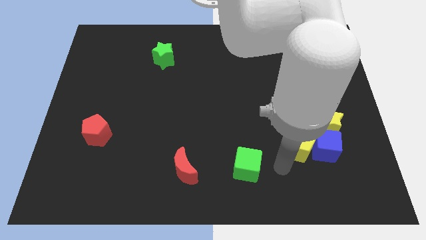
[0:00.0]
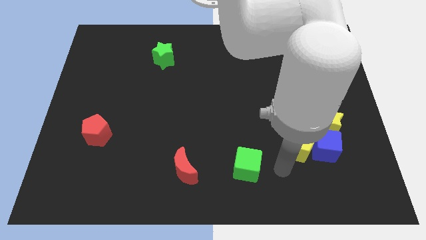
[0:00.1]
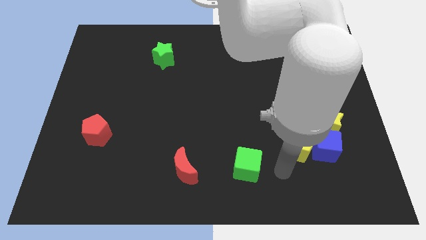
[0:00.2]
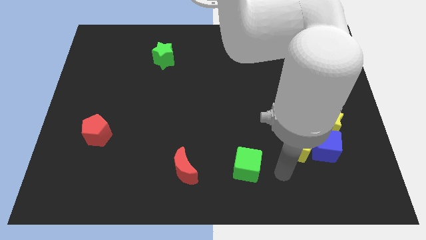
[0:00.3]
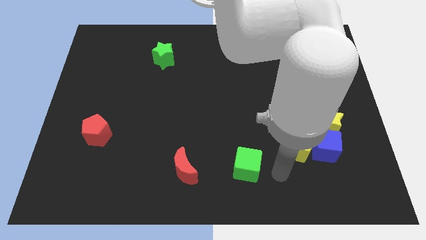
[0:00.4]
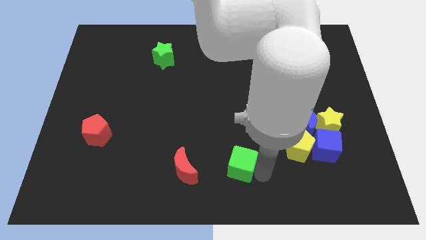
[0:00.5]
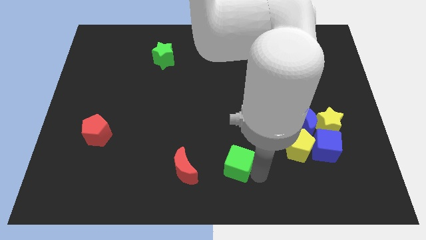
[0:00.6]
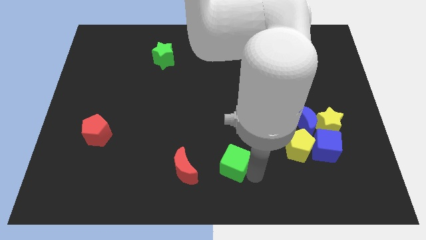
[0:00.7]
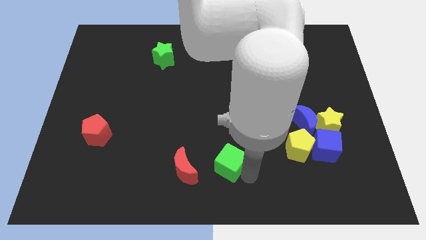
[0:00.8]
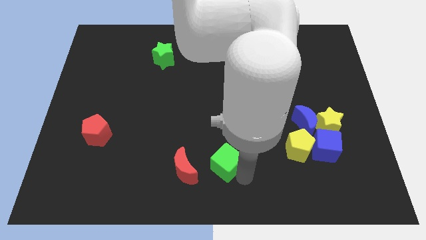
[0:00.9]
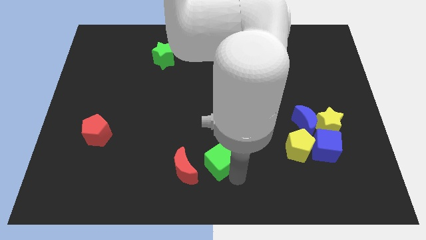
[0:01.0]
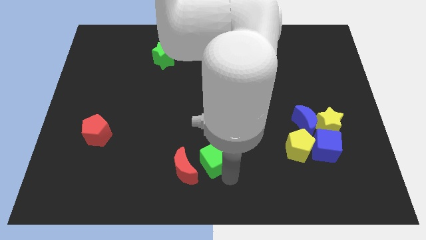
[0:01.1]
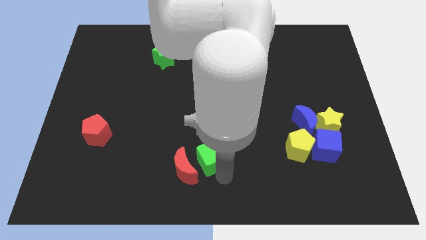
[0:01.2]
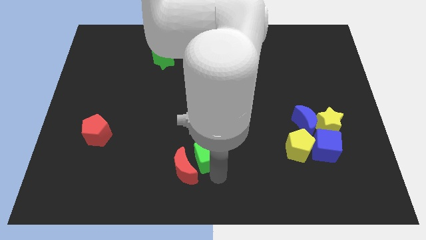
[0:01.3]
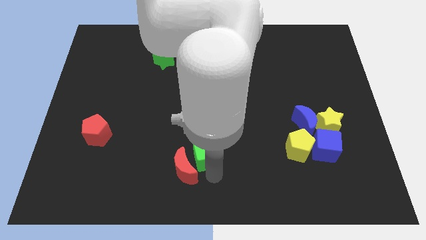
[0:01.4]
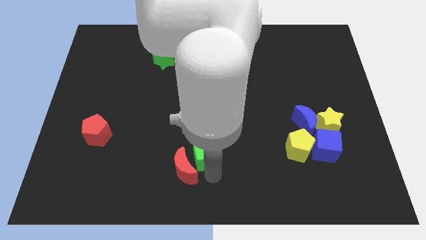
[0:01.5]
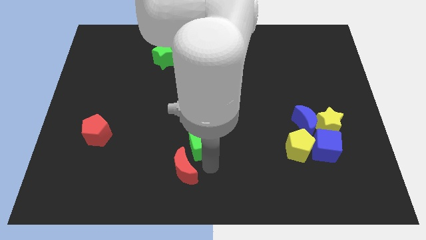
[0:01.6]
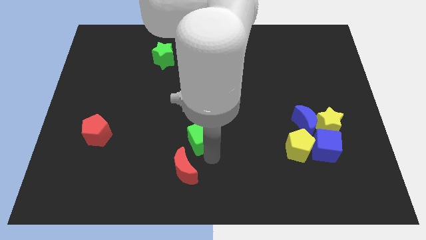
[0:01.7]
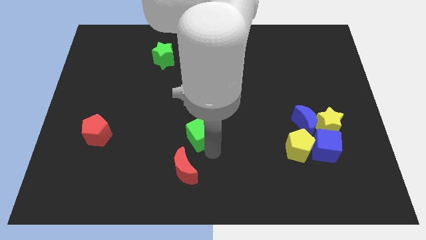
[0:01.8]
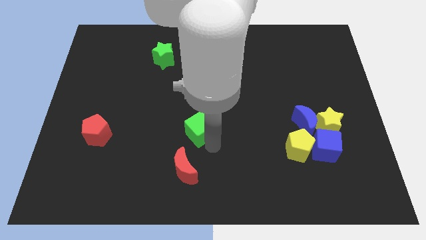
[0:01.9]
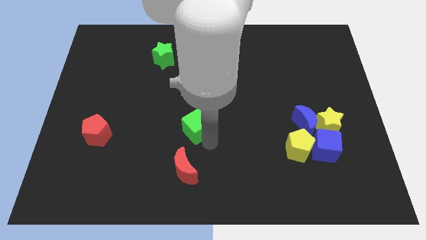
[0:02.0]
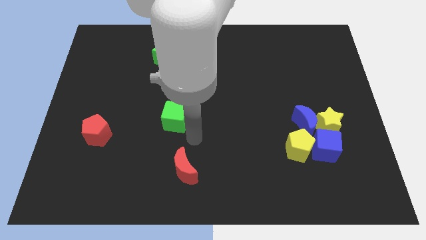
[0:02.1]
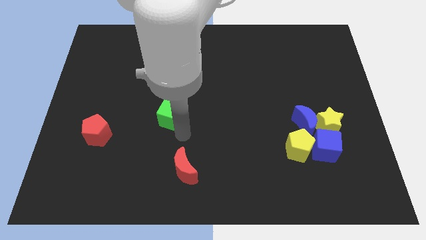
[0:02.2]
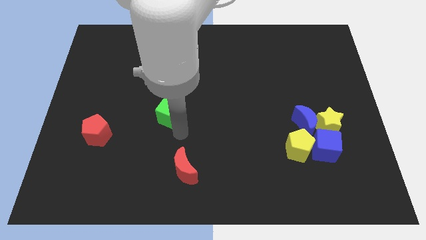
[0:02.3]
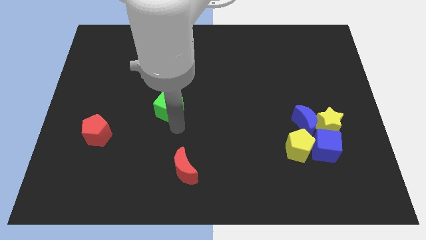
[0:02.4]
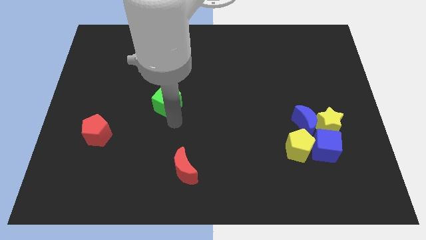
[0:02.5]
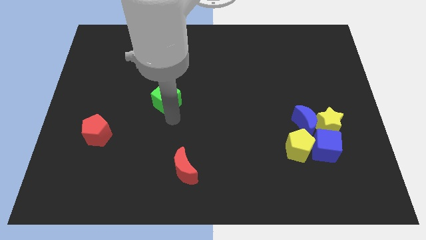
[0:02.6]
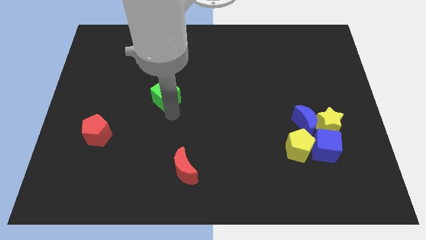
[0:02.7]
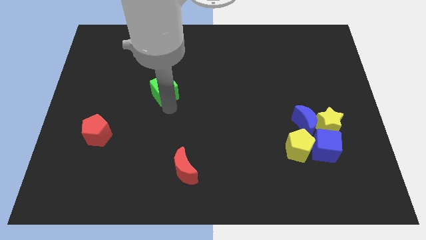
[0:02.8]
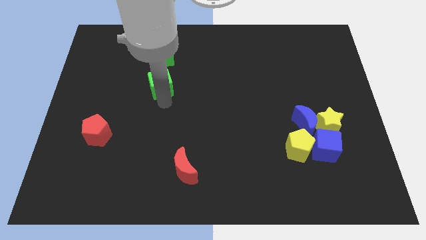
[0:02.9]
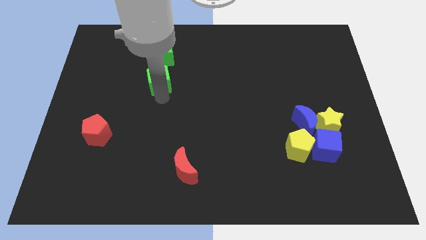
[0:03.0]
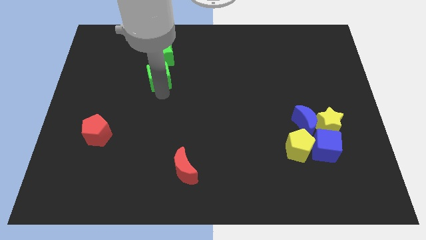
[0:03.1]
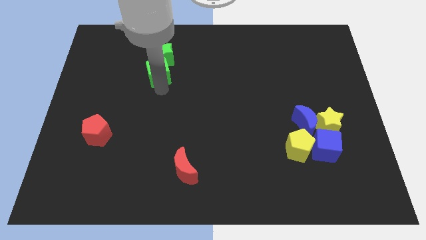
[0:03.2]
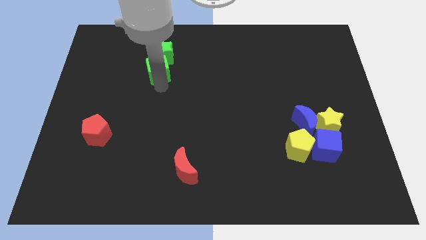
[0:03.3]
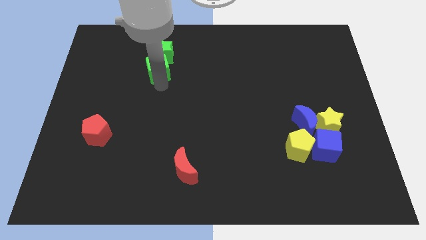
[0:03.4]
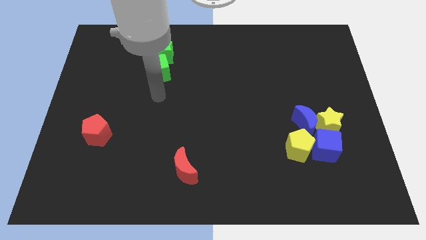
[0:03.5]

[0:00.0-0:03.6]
move the green moon below the green star

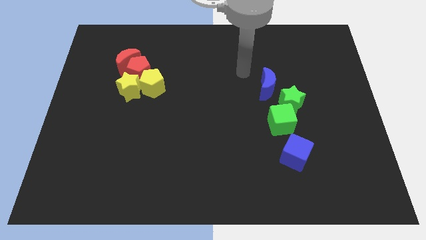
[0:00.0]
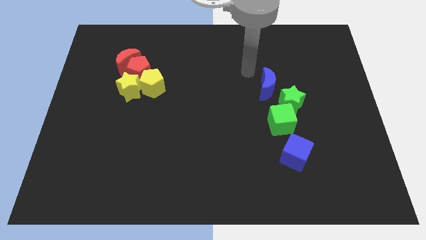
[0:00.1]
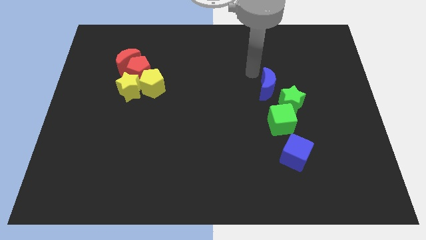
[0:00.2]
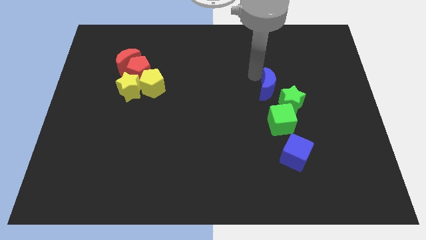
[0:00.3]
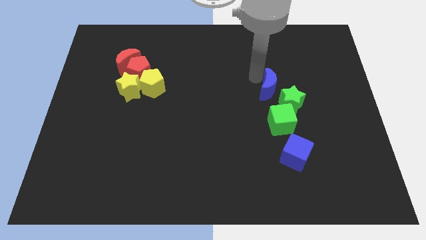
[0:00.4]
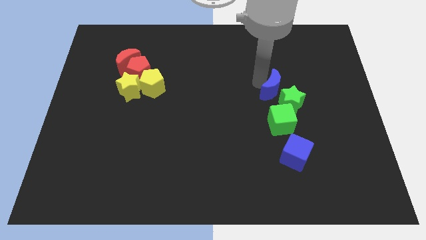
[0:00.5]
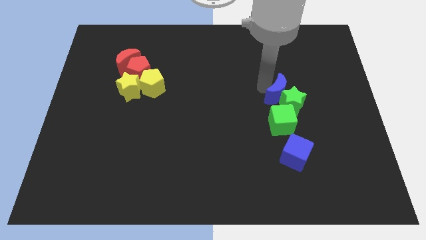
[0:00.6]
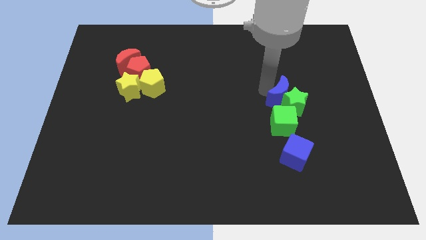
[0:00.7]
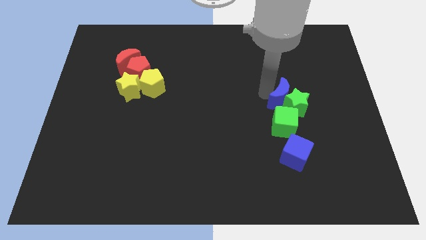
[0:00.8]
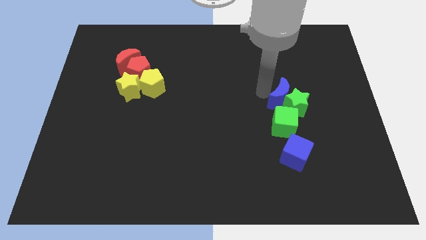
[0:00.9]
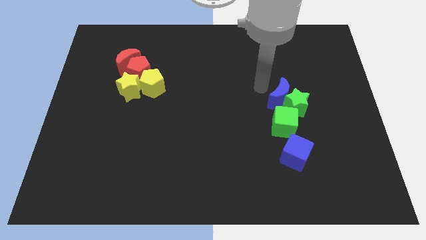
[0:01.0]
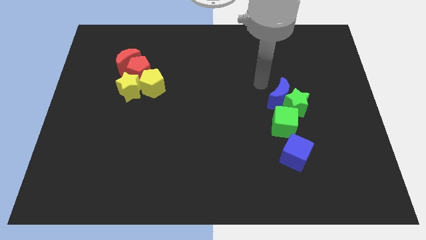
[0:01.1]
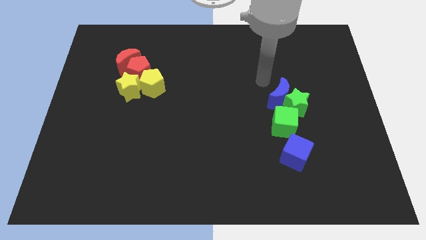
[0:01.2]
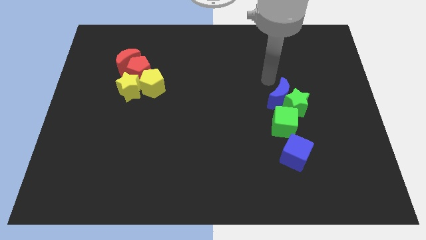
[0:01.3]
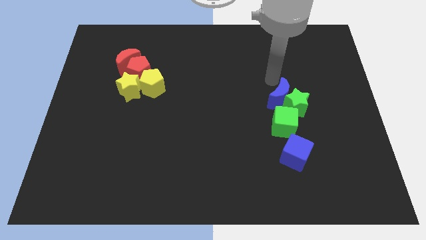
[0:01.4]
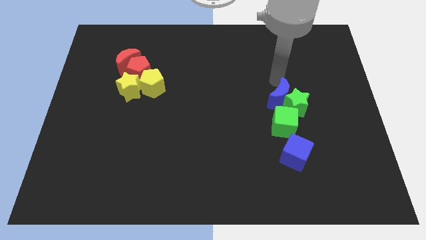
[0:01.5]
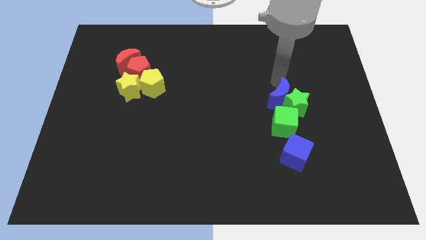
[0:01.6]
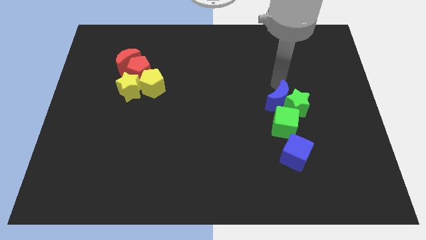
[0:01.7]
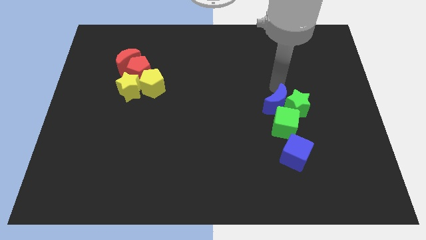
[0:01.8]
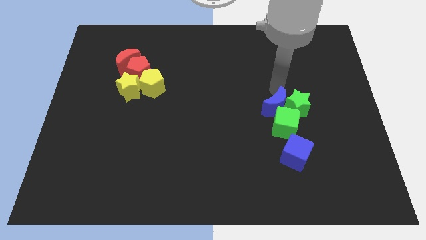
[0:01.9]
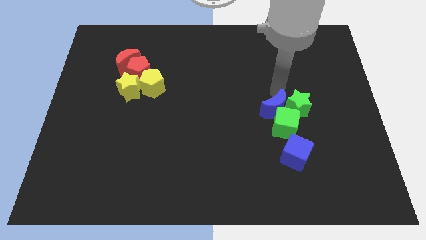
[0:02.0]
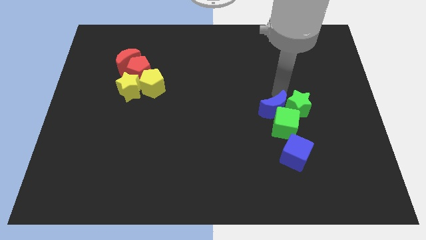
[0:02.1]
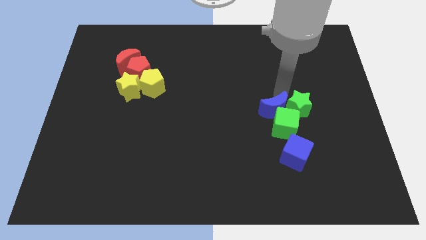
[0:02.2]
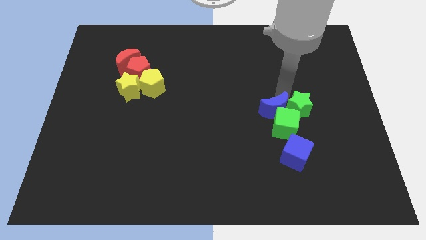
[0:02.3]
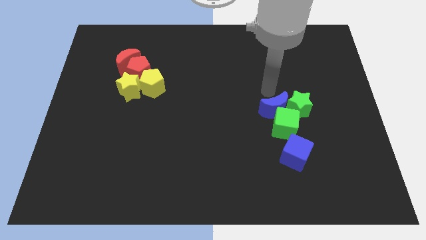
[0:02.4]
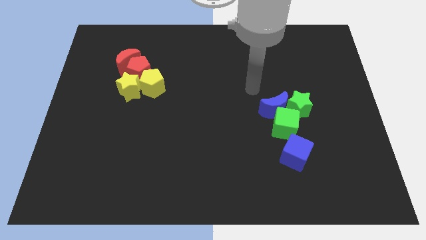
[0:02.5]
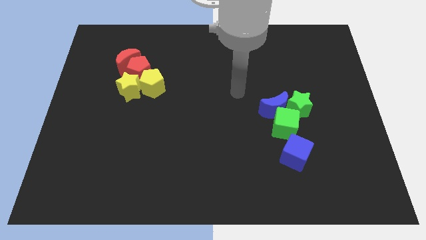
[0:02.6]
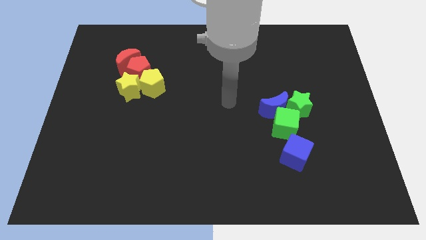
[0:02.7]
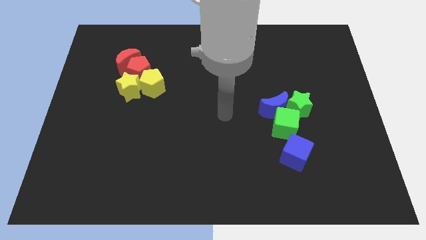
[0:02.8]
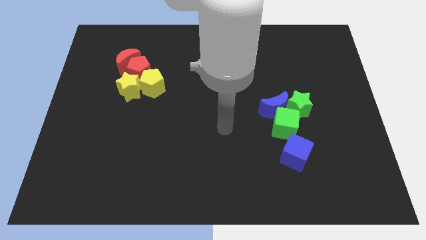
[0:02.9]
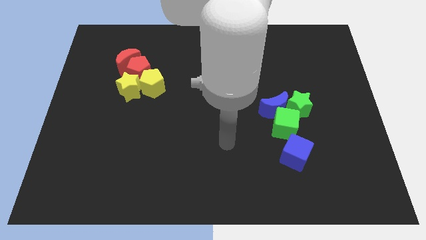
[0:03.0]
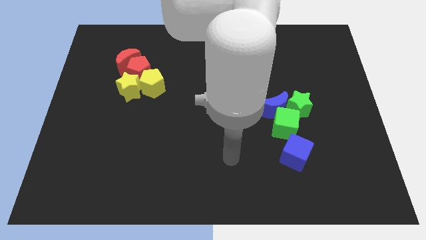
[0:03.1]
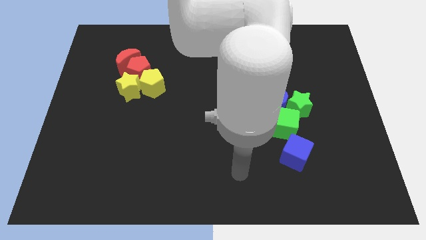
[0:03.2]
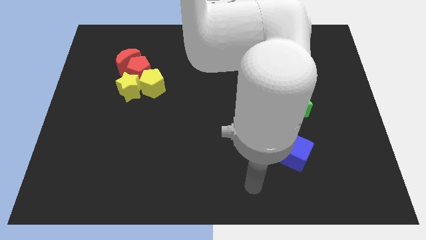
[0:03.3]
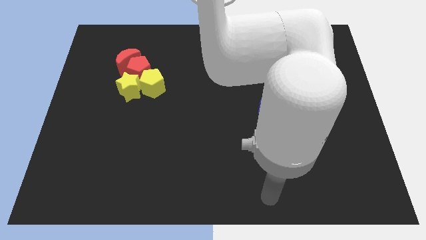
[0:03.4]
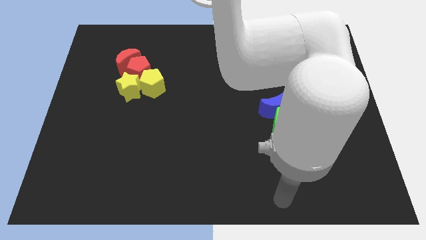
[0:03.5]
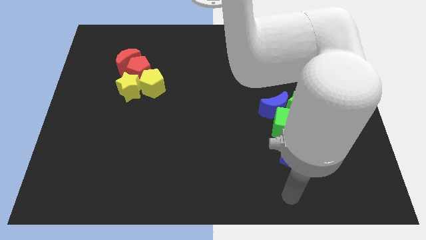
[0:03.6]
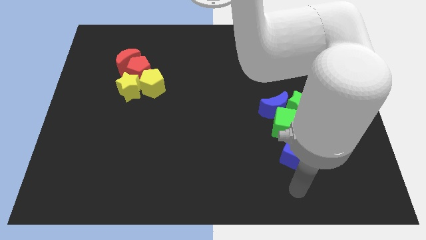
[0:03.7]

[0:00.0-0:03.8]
push the blue crescent into the group of green blocks

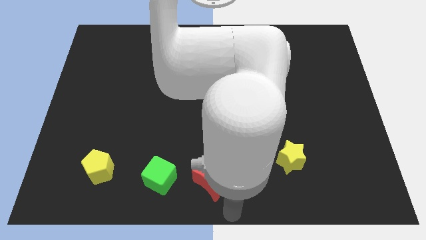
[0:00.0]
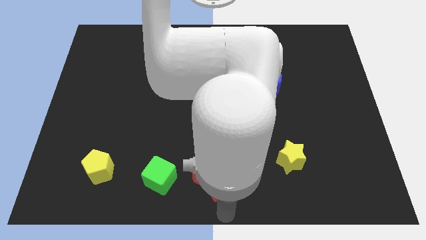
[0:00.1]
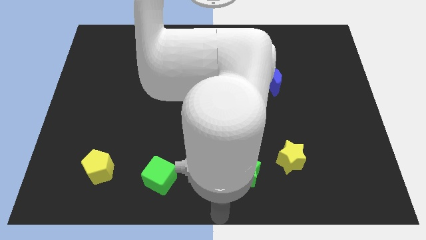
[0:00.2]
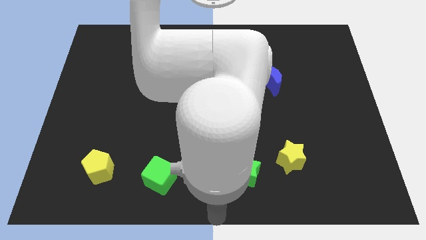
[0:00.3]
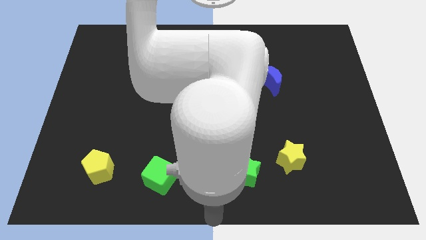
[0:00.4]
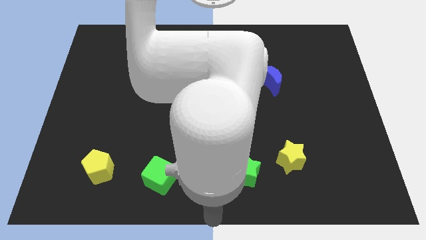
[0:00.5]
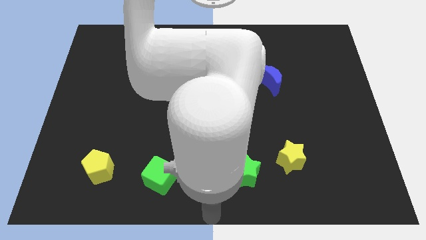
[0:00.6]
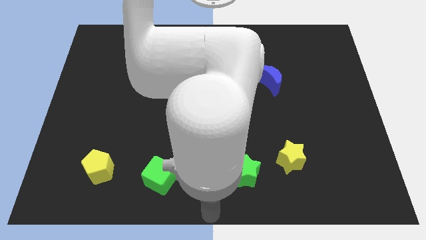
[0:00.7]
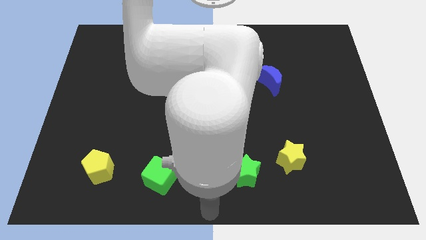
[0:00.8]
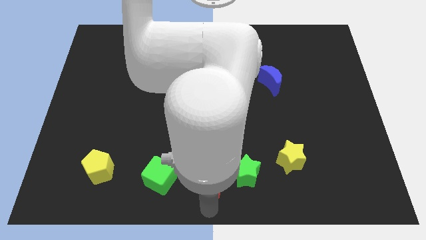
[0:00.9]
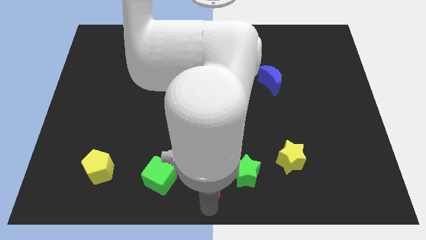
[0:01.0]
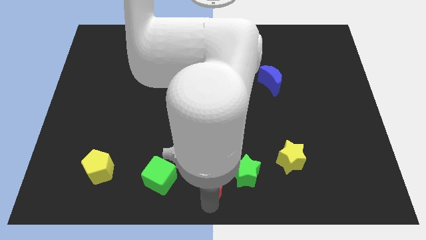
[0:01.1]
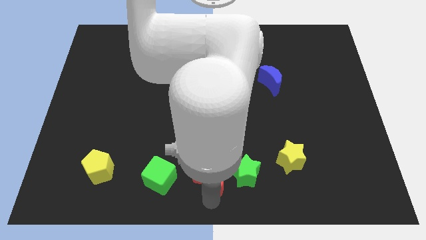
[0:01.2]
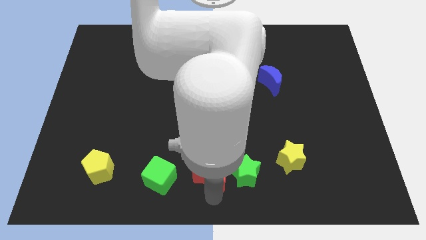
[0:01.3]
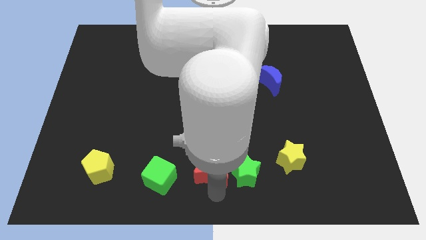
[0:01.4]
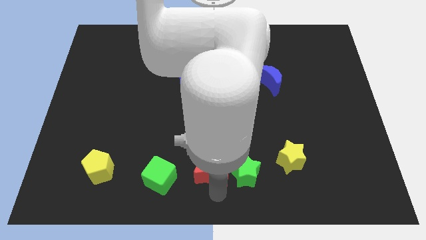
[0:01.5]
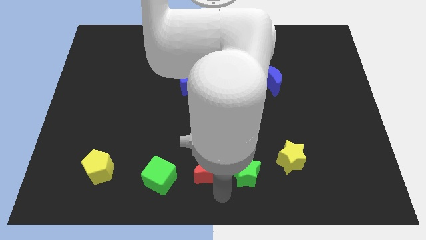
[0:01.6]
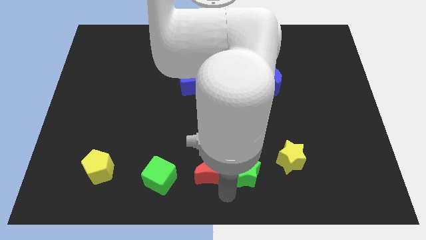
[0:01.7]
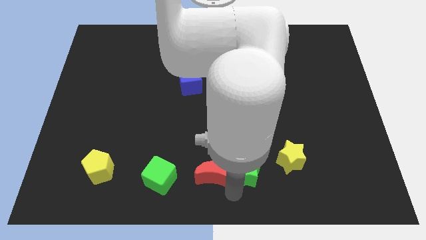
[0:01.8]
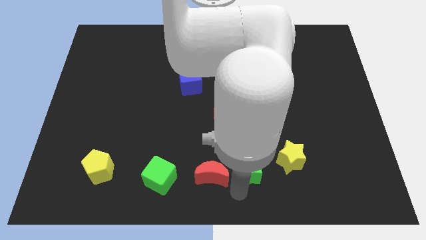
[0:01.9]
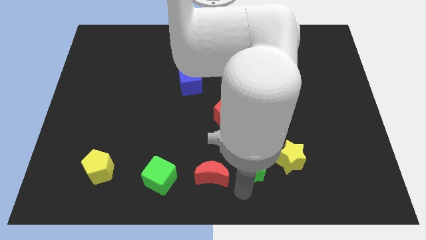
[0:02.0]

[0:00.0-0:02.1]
slightly move the red crescent towards top side
